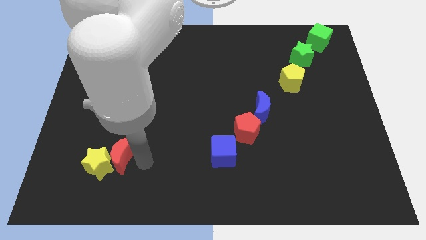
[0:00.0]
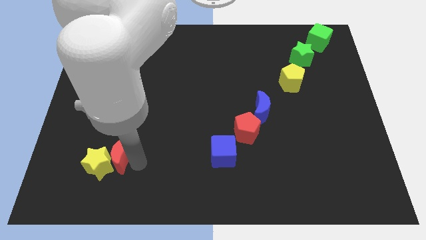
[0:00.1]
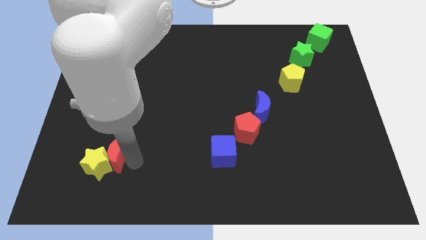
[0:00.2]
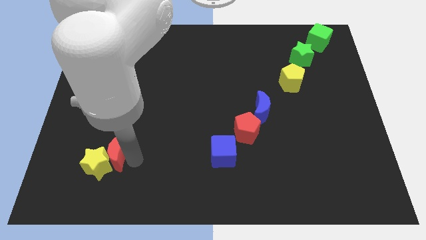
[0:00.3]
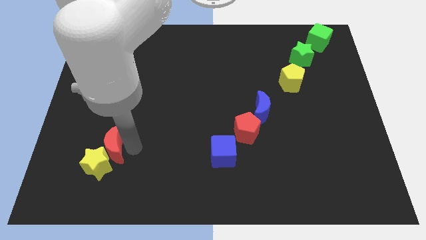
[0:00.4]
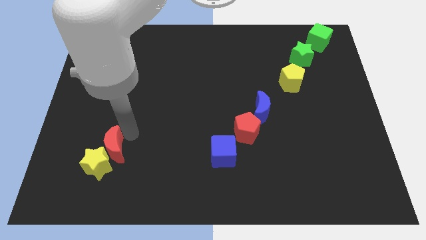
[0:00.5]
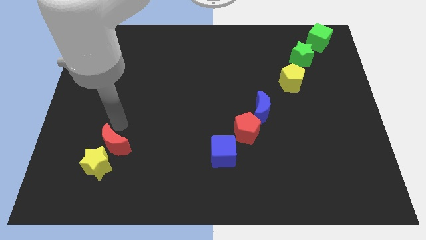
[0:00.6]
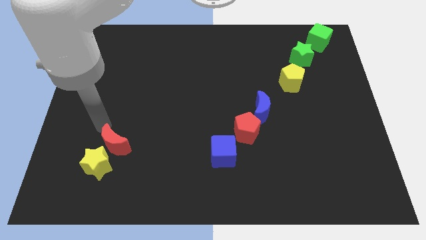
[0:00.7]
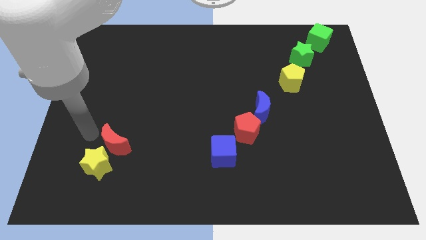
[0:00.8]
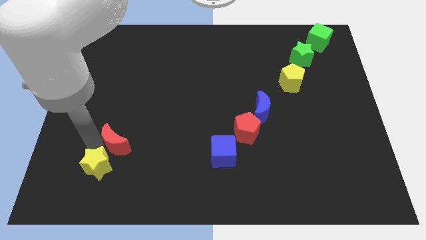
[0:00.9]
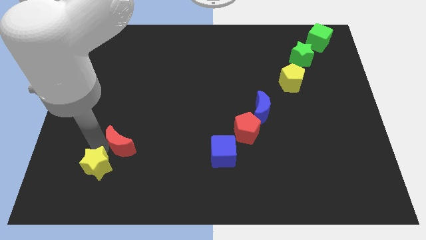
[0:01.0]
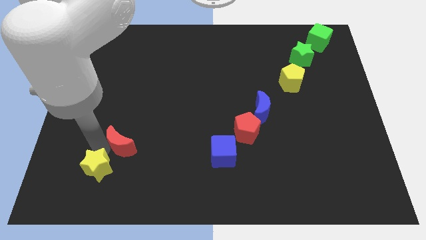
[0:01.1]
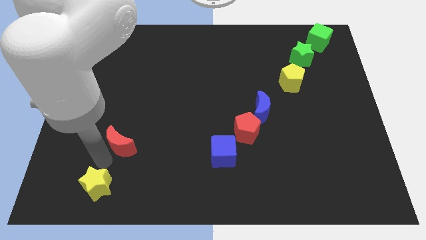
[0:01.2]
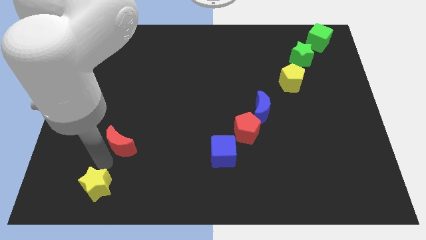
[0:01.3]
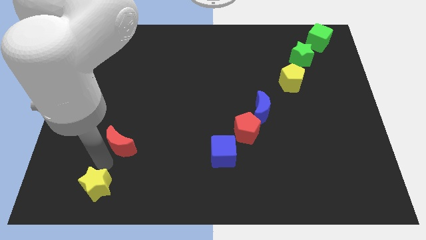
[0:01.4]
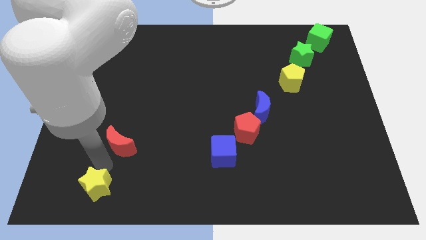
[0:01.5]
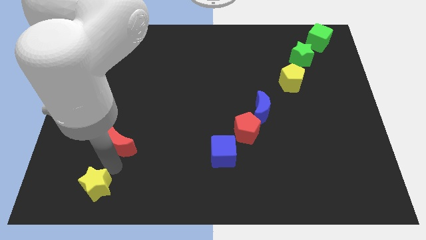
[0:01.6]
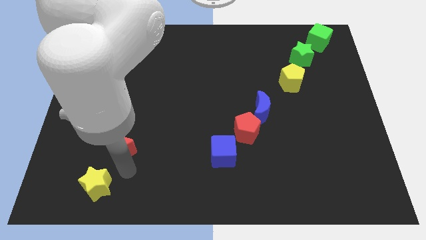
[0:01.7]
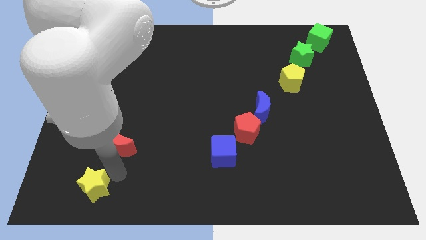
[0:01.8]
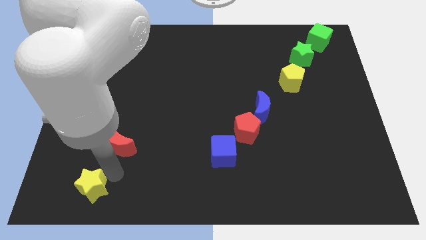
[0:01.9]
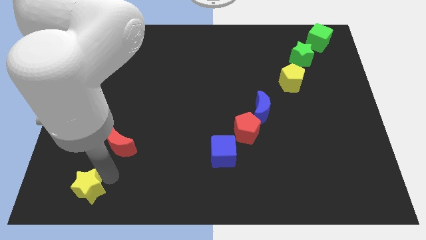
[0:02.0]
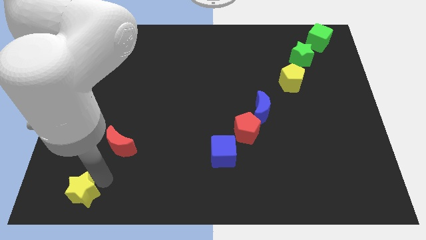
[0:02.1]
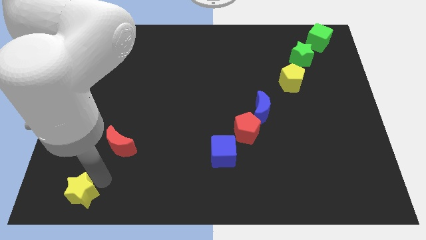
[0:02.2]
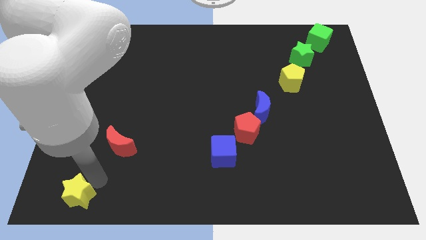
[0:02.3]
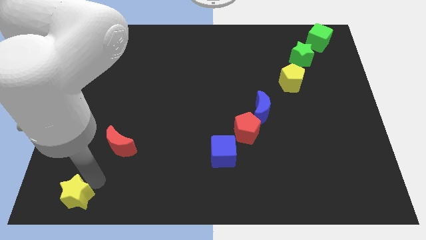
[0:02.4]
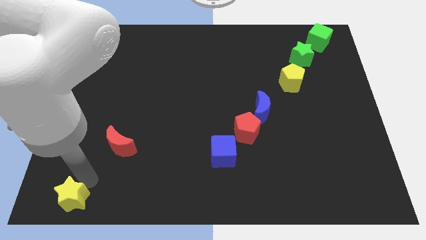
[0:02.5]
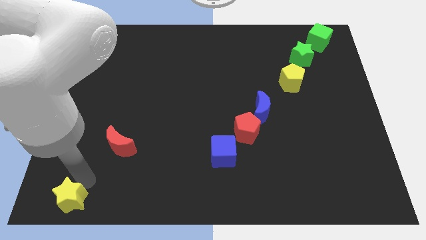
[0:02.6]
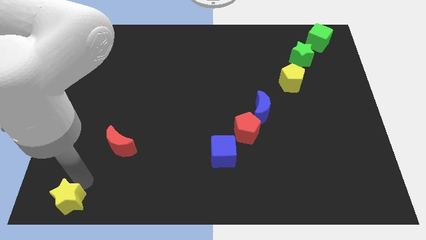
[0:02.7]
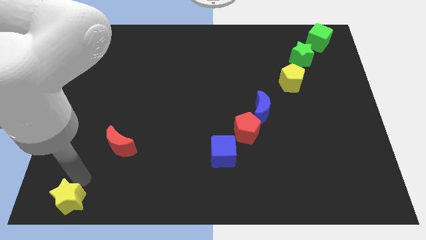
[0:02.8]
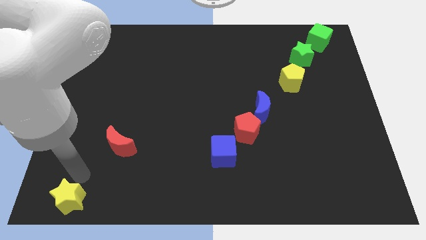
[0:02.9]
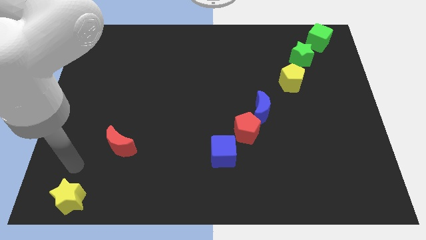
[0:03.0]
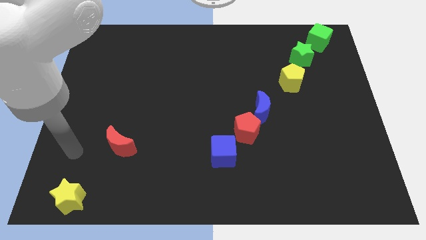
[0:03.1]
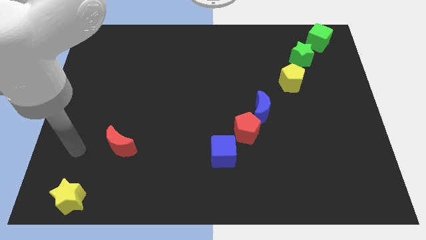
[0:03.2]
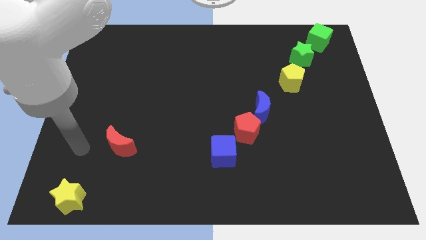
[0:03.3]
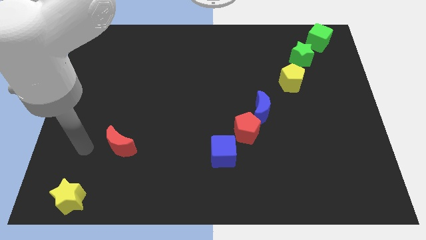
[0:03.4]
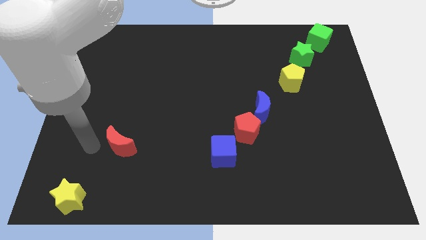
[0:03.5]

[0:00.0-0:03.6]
move the yellow star away from the left side of the red moon

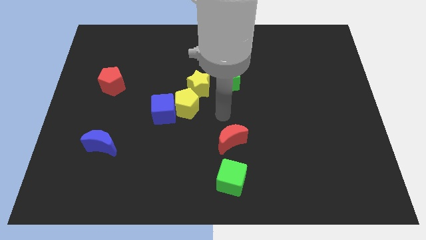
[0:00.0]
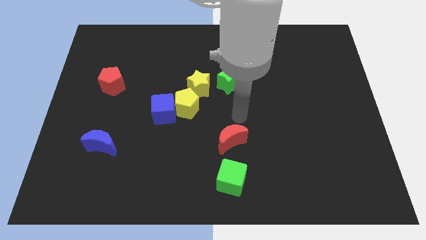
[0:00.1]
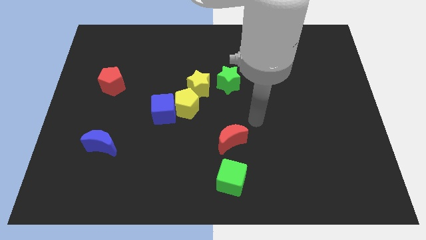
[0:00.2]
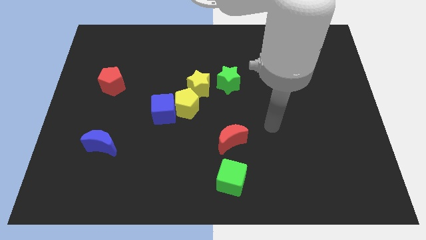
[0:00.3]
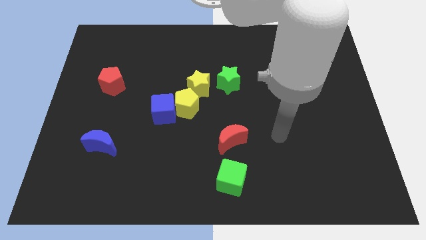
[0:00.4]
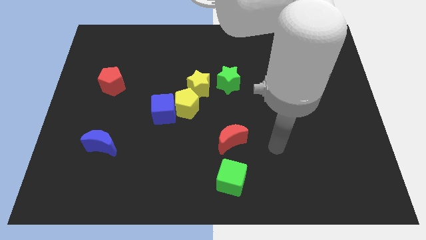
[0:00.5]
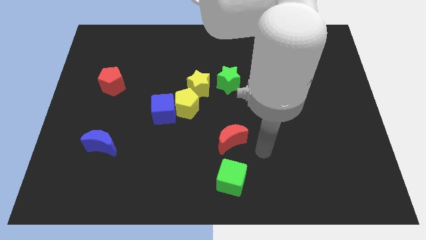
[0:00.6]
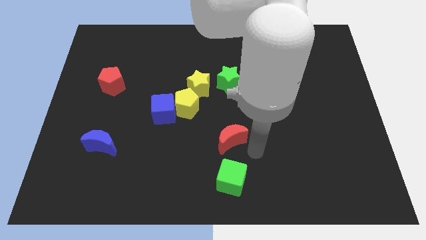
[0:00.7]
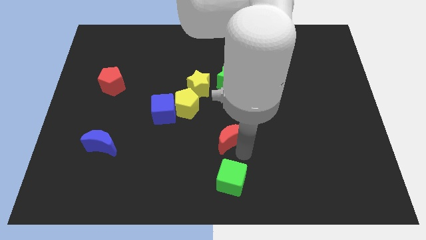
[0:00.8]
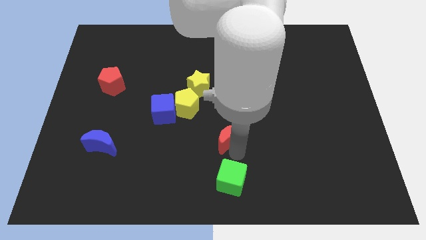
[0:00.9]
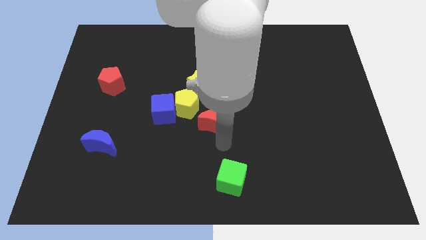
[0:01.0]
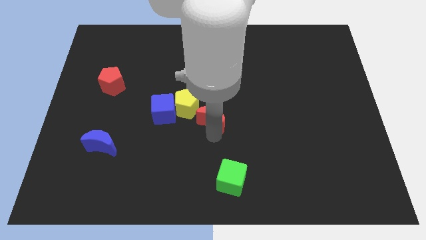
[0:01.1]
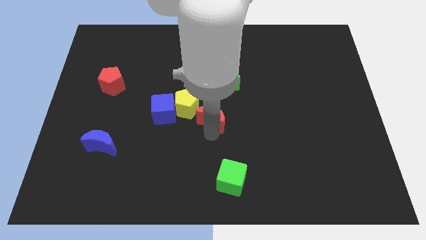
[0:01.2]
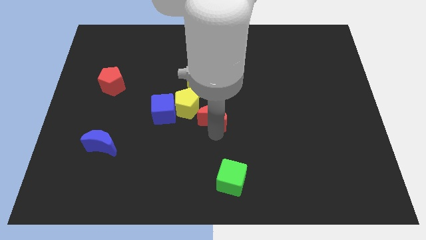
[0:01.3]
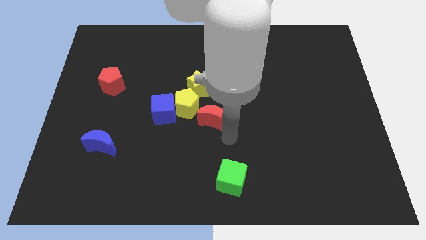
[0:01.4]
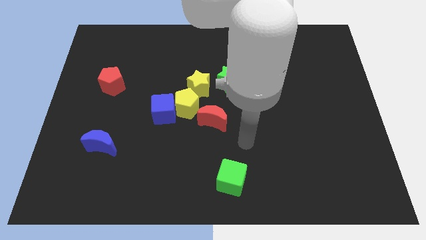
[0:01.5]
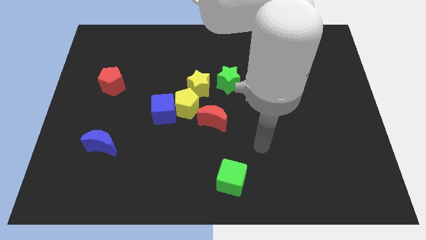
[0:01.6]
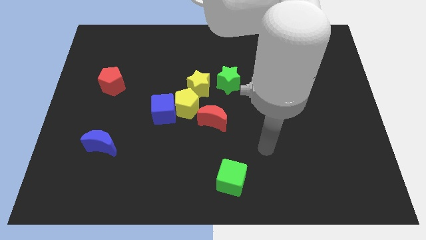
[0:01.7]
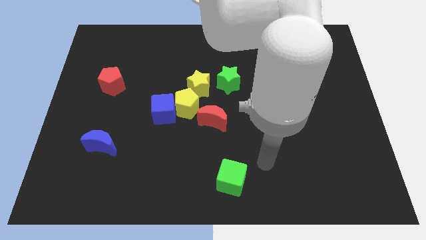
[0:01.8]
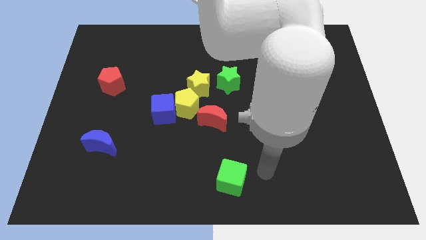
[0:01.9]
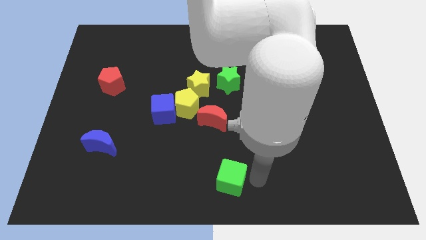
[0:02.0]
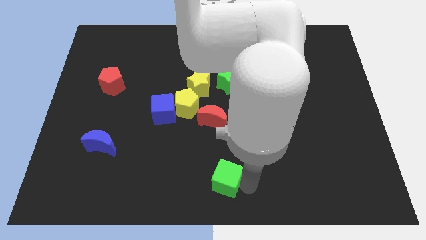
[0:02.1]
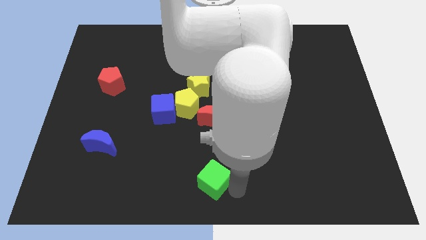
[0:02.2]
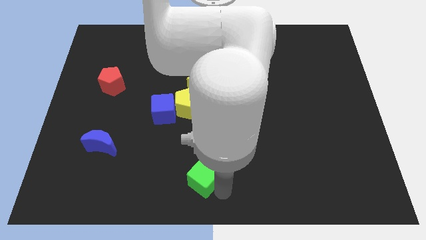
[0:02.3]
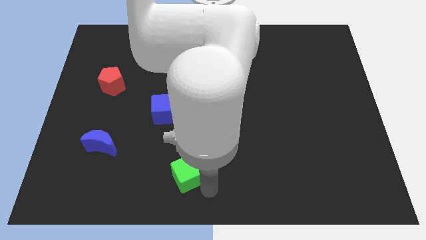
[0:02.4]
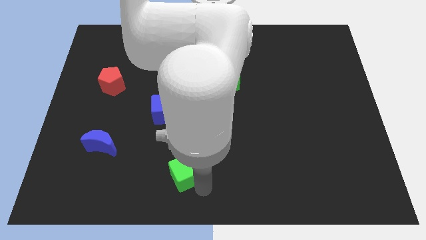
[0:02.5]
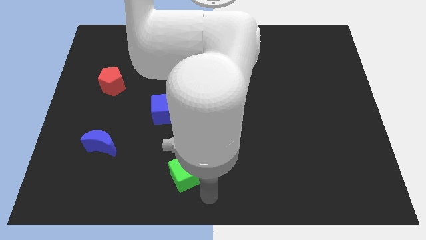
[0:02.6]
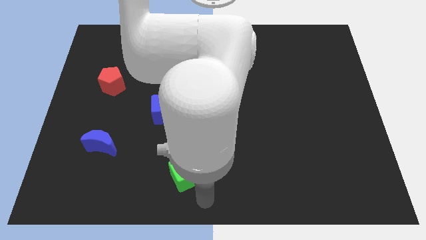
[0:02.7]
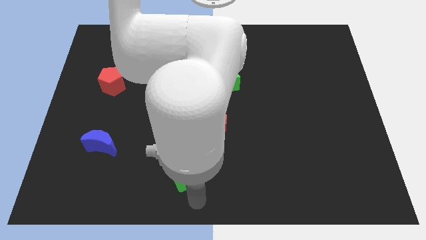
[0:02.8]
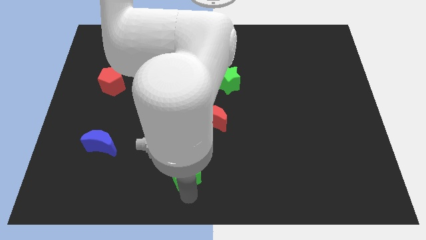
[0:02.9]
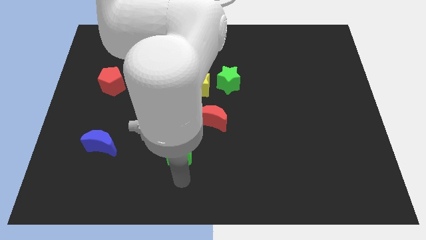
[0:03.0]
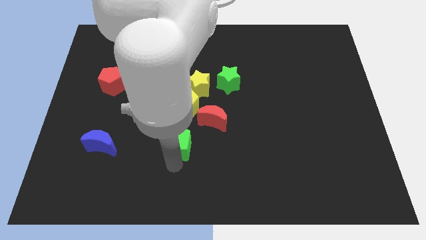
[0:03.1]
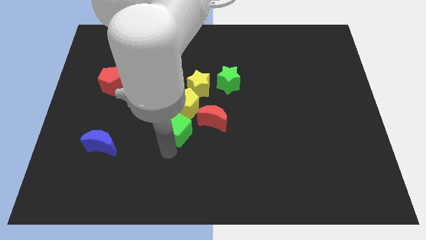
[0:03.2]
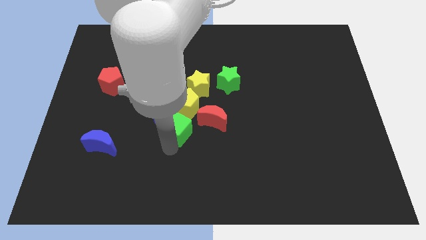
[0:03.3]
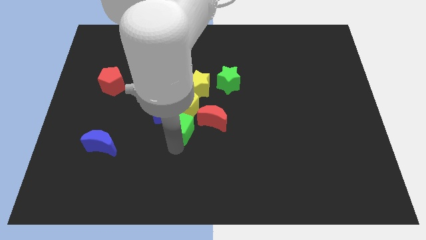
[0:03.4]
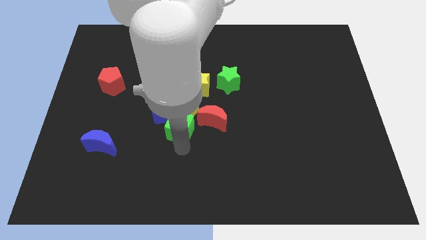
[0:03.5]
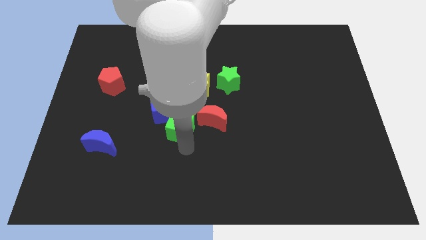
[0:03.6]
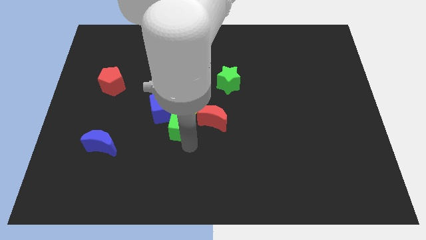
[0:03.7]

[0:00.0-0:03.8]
group up the red moon green cube yellow blocks and blue cube

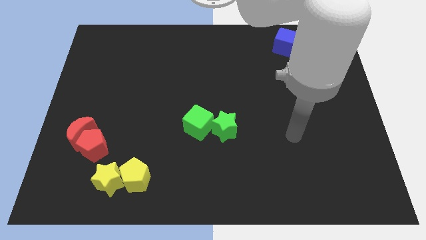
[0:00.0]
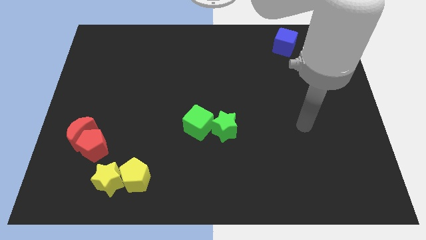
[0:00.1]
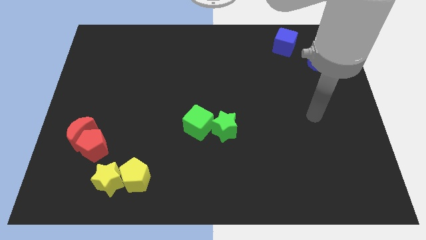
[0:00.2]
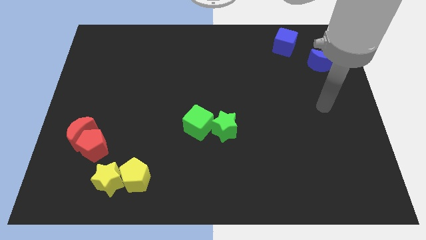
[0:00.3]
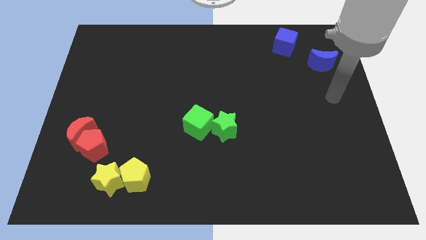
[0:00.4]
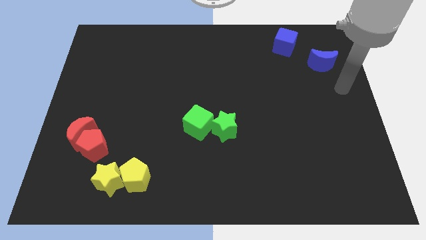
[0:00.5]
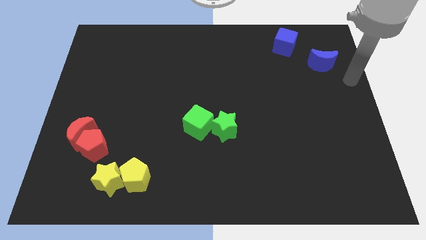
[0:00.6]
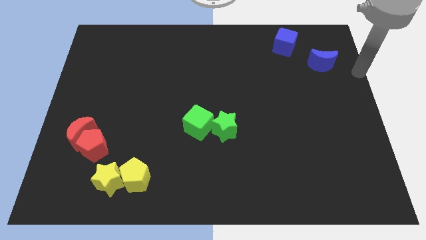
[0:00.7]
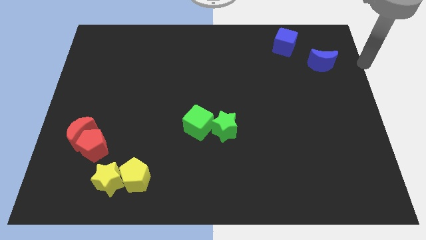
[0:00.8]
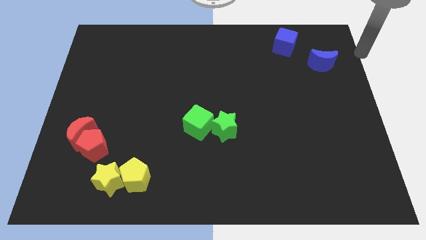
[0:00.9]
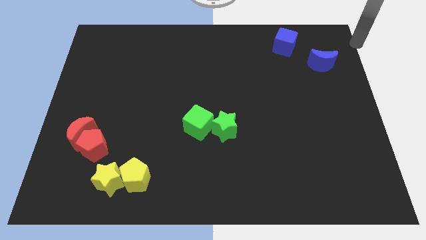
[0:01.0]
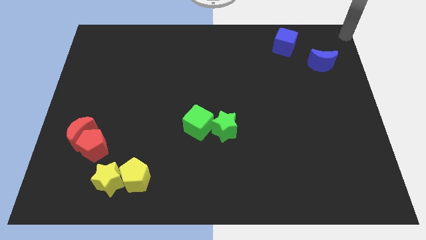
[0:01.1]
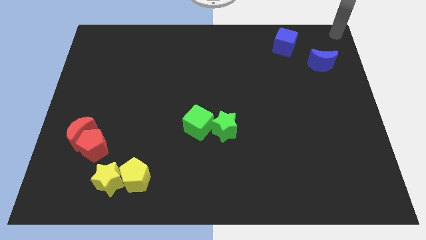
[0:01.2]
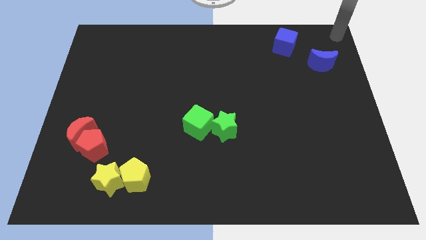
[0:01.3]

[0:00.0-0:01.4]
place your hand at top right corner of the board

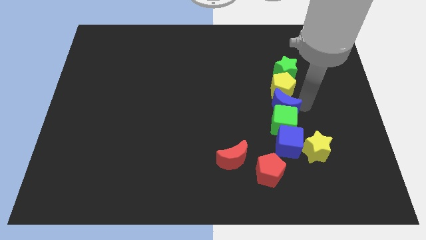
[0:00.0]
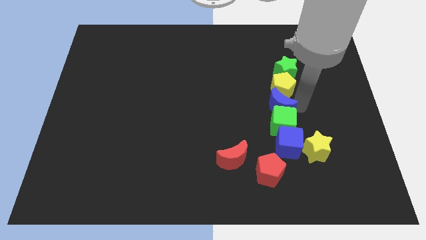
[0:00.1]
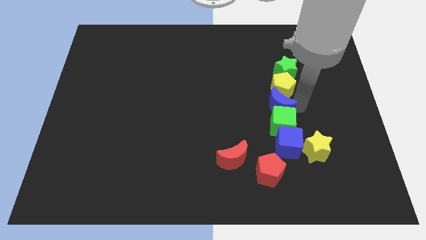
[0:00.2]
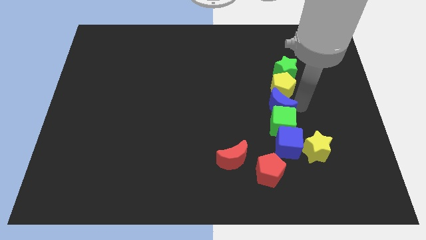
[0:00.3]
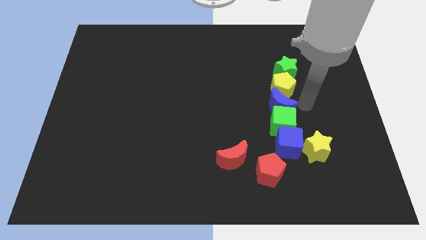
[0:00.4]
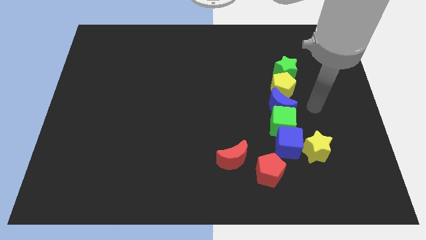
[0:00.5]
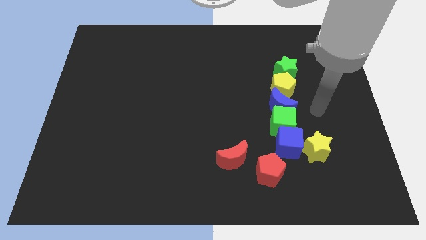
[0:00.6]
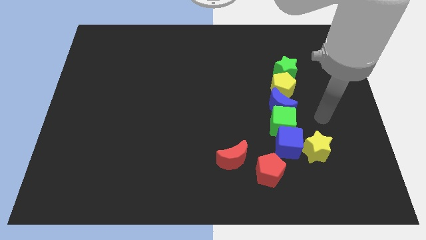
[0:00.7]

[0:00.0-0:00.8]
move blue moon below yellow pentagon
